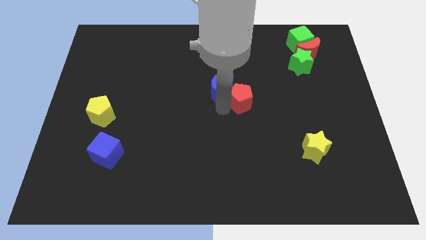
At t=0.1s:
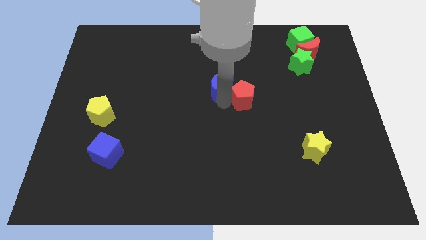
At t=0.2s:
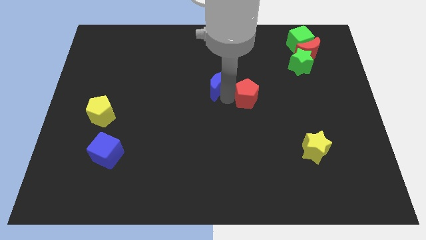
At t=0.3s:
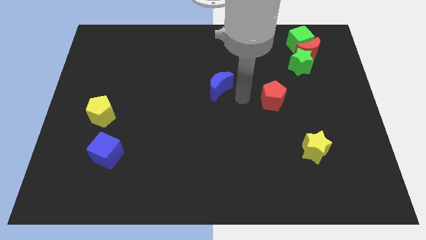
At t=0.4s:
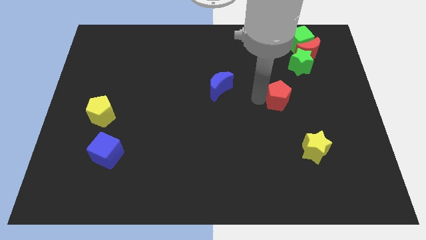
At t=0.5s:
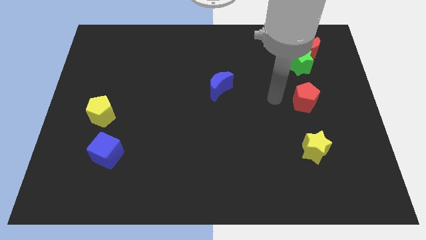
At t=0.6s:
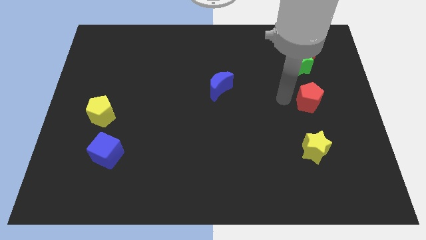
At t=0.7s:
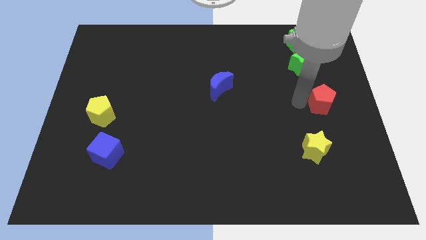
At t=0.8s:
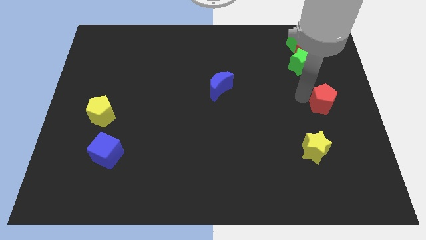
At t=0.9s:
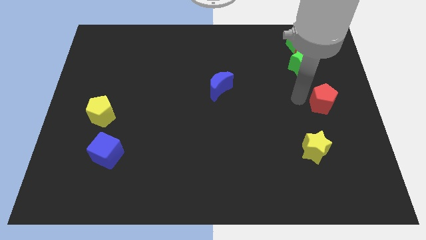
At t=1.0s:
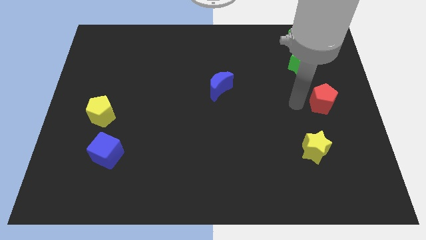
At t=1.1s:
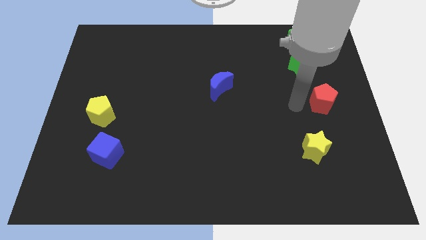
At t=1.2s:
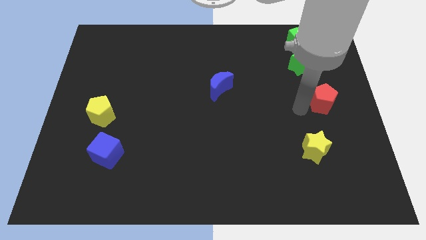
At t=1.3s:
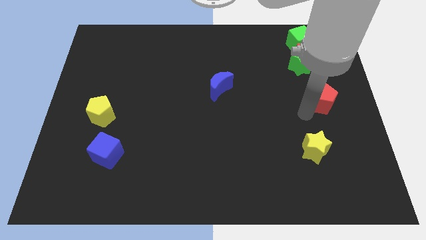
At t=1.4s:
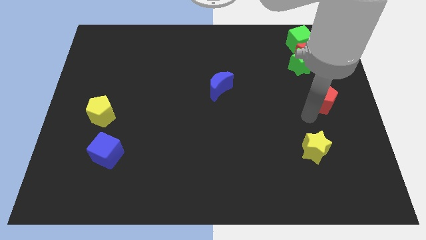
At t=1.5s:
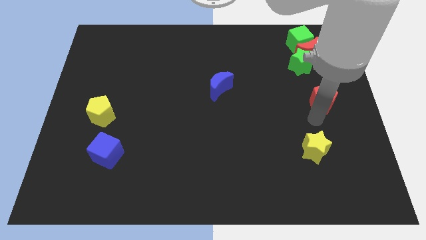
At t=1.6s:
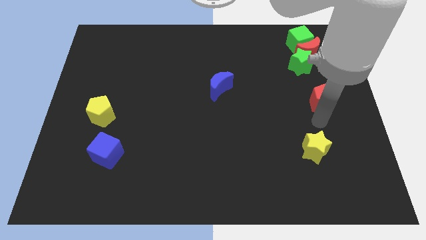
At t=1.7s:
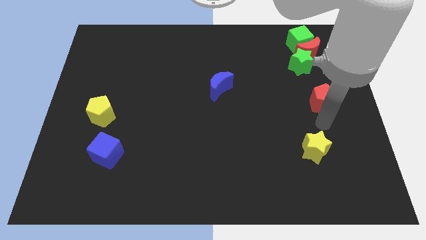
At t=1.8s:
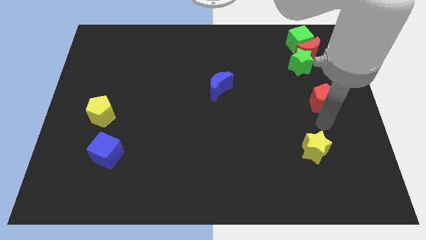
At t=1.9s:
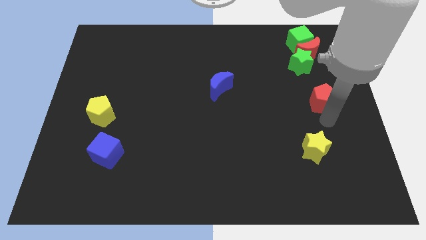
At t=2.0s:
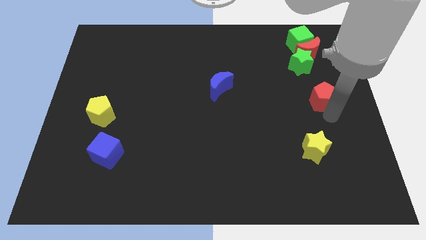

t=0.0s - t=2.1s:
push the red pentagon to the right

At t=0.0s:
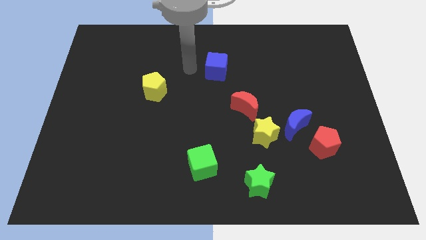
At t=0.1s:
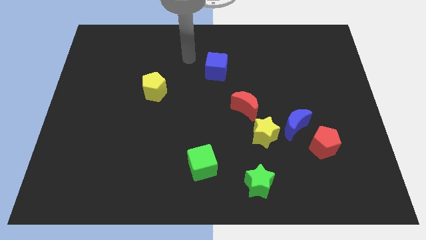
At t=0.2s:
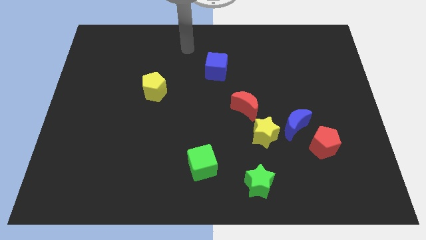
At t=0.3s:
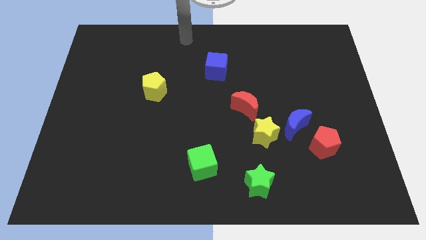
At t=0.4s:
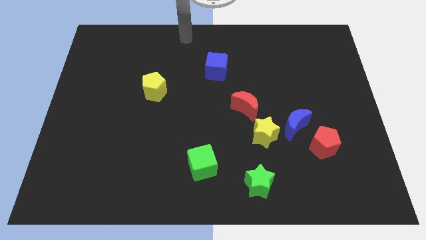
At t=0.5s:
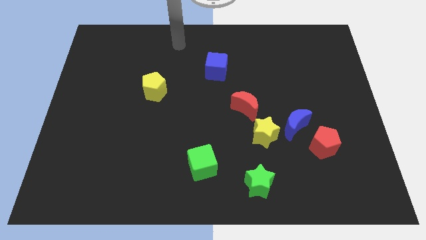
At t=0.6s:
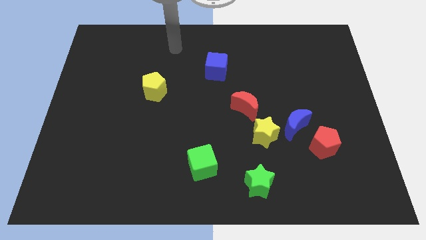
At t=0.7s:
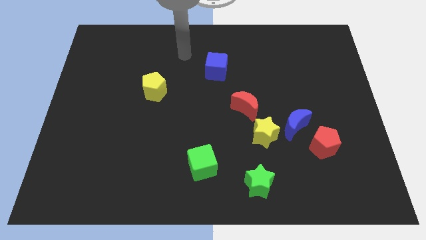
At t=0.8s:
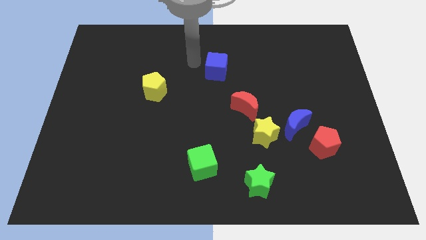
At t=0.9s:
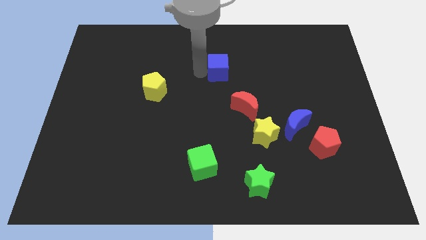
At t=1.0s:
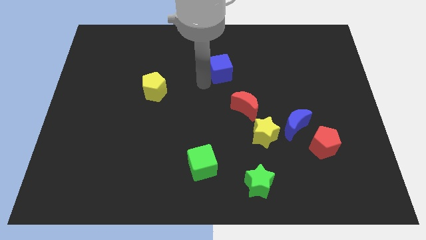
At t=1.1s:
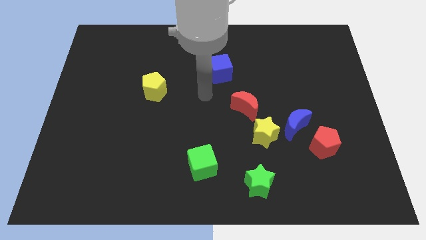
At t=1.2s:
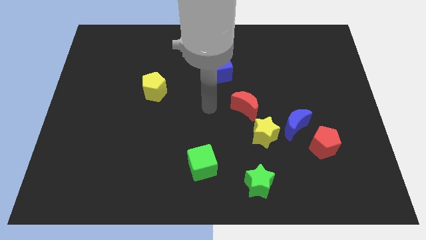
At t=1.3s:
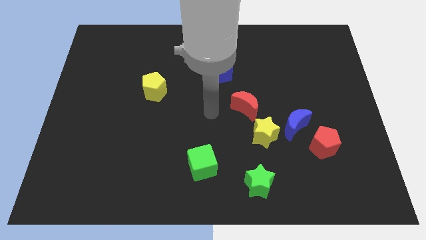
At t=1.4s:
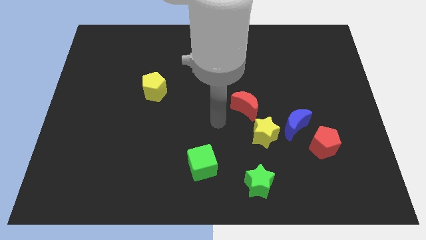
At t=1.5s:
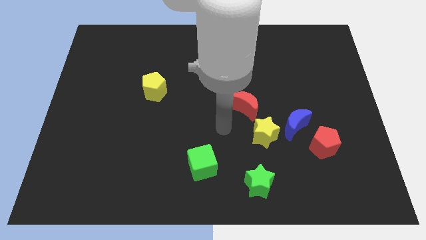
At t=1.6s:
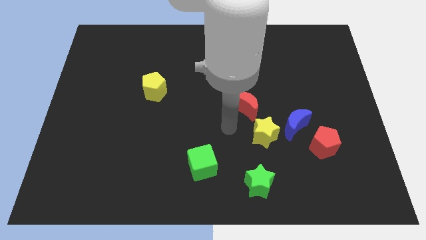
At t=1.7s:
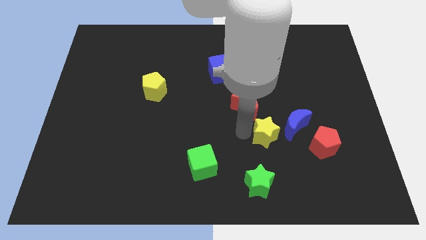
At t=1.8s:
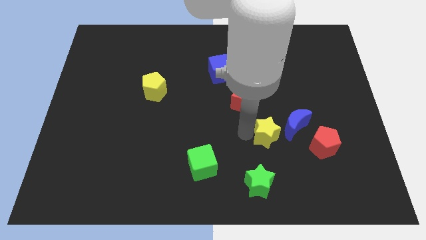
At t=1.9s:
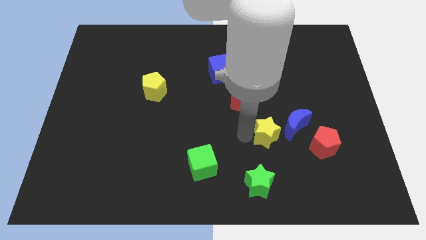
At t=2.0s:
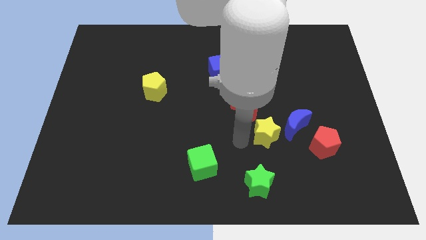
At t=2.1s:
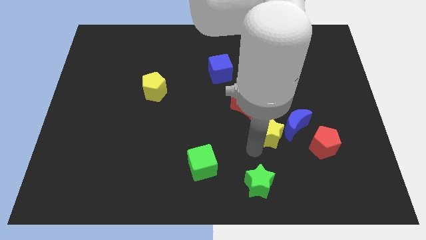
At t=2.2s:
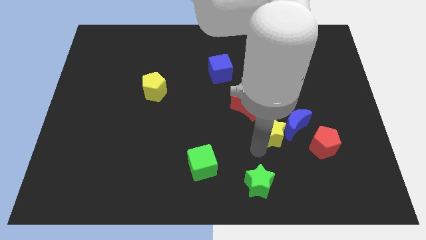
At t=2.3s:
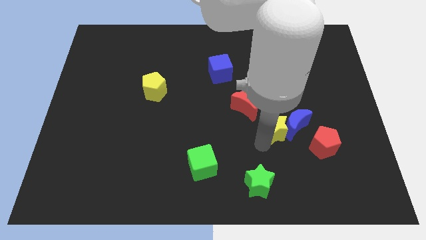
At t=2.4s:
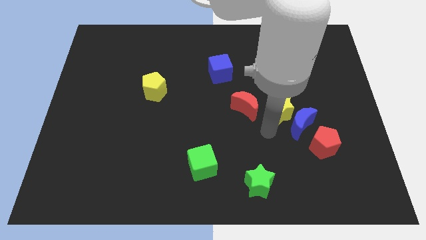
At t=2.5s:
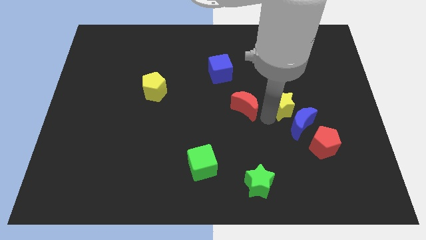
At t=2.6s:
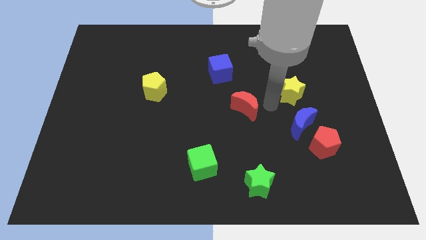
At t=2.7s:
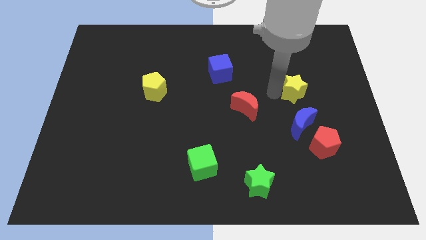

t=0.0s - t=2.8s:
push the yellow star to the right

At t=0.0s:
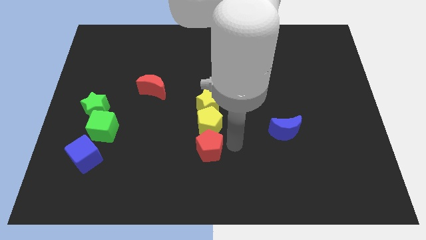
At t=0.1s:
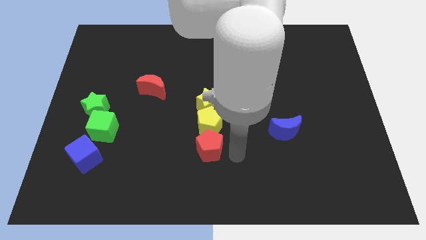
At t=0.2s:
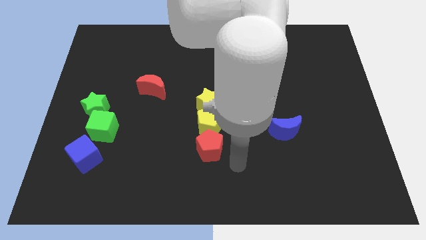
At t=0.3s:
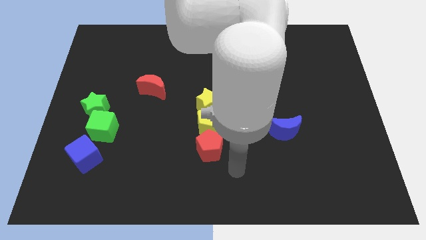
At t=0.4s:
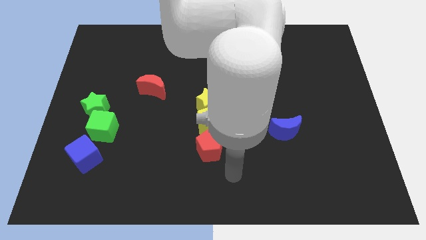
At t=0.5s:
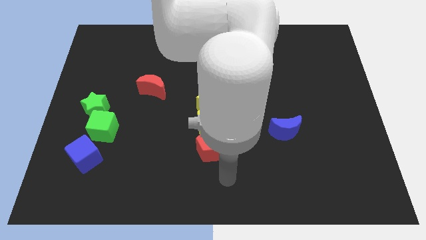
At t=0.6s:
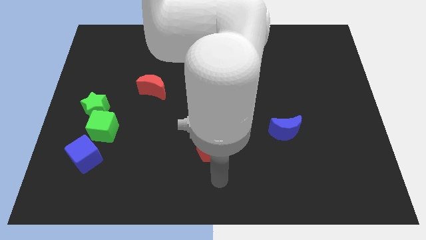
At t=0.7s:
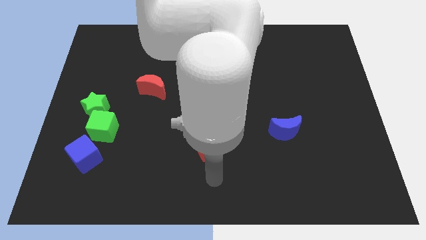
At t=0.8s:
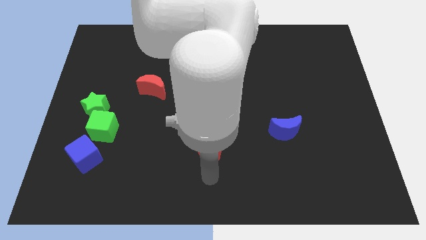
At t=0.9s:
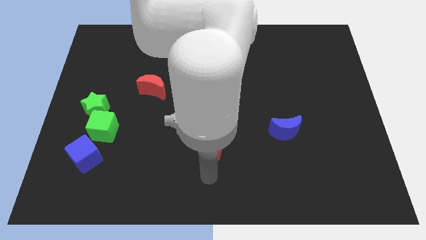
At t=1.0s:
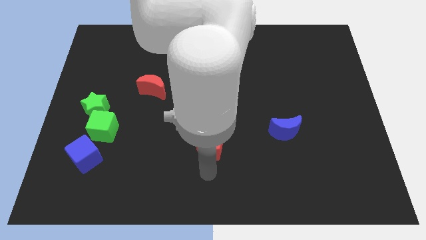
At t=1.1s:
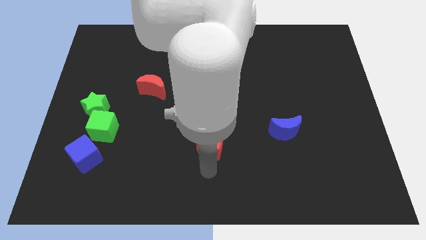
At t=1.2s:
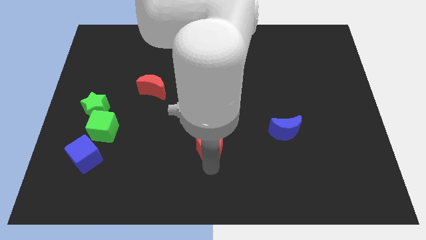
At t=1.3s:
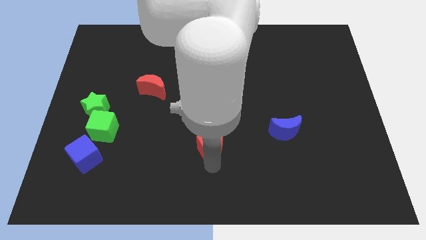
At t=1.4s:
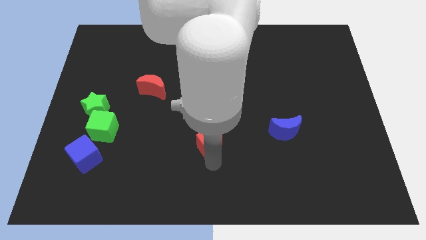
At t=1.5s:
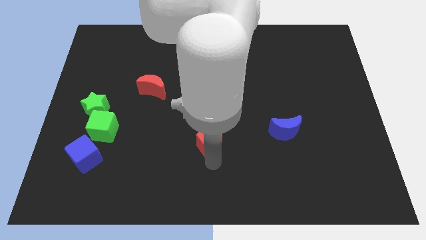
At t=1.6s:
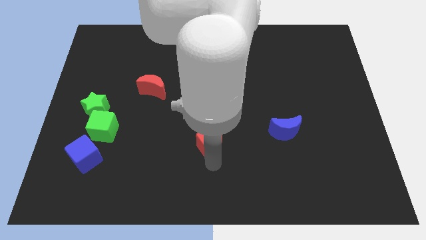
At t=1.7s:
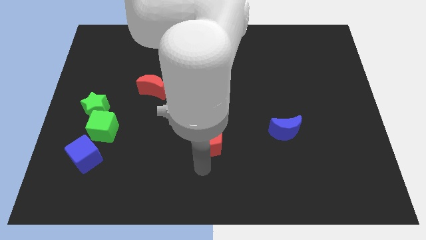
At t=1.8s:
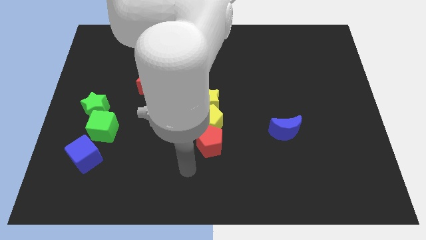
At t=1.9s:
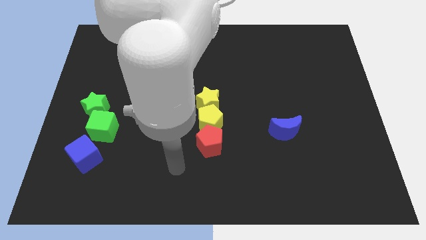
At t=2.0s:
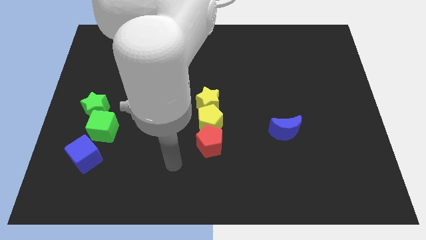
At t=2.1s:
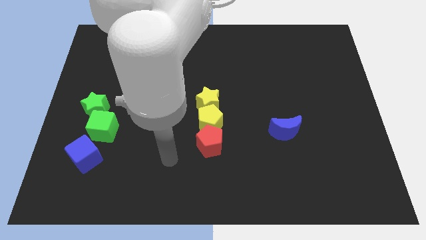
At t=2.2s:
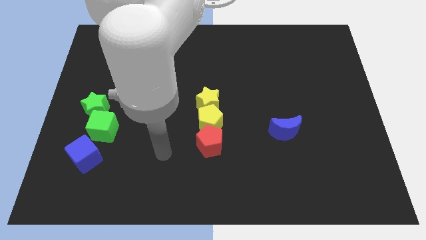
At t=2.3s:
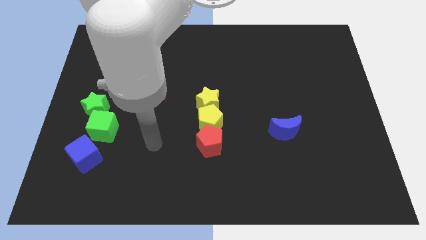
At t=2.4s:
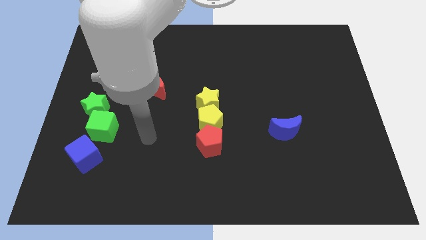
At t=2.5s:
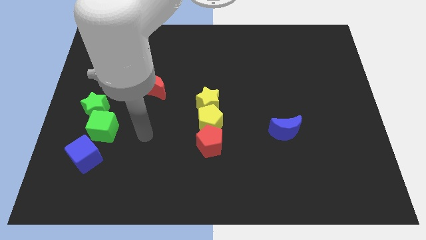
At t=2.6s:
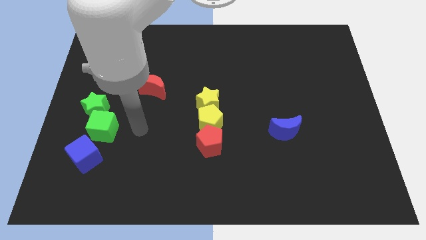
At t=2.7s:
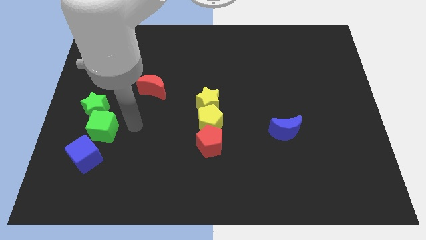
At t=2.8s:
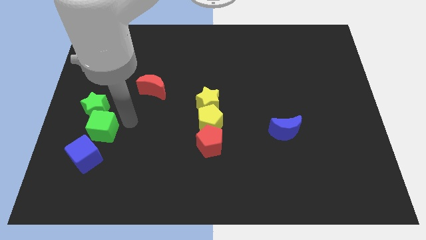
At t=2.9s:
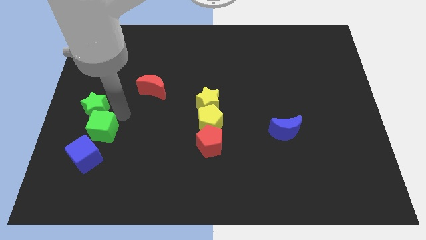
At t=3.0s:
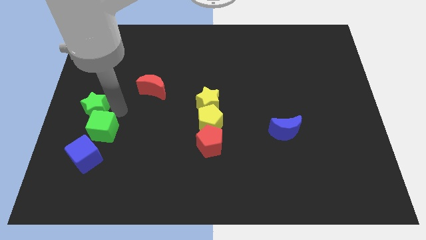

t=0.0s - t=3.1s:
move the vertical line of blocks slightly upwards and go away

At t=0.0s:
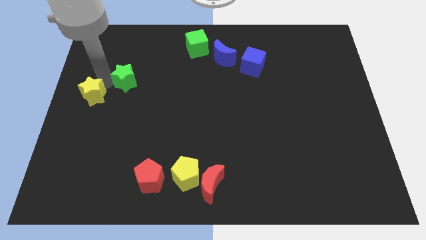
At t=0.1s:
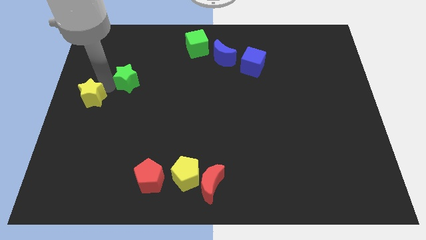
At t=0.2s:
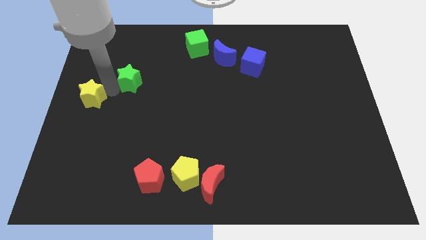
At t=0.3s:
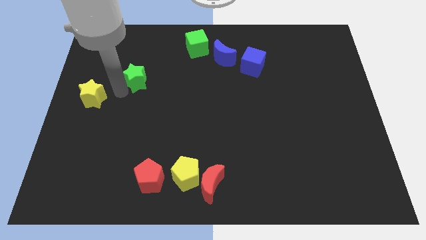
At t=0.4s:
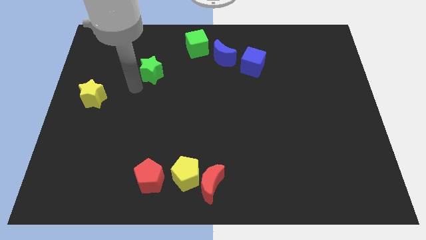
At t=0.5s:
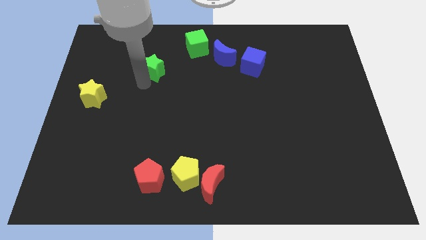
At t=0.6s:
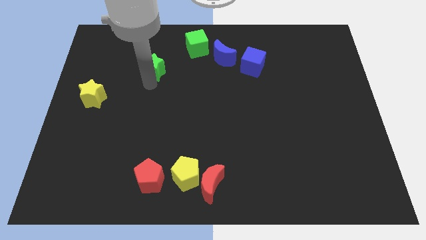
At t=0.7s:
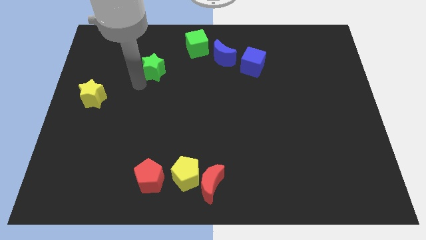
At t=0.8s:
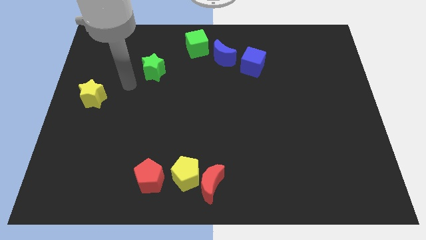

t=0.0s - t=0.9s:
separate the green star from the yellow star

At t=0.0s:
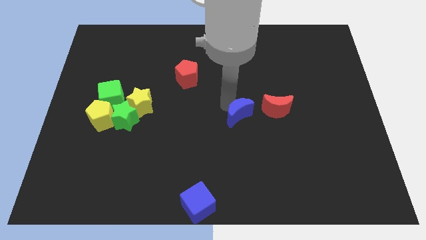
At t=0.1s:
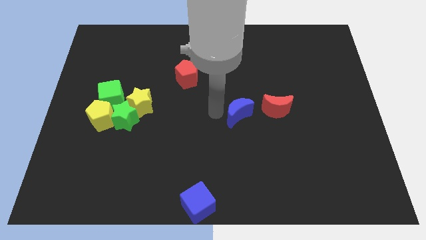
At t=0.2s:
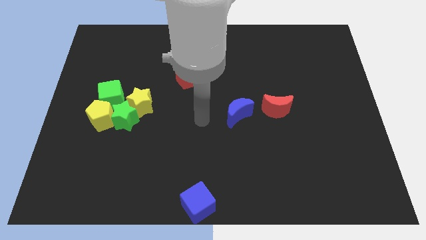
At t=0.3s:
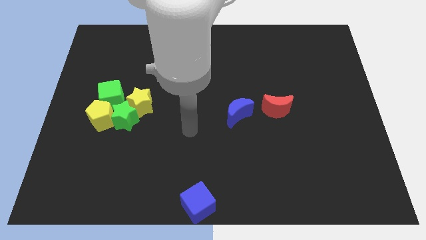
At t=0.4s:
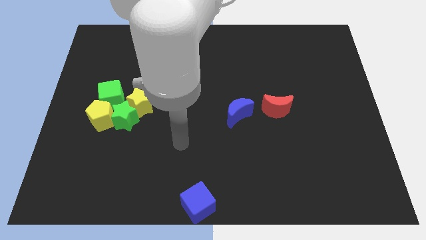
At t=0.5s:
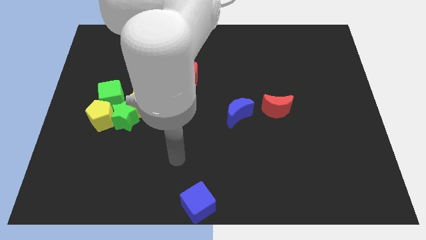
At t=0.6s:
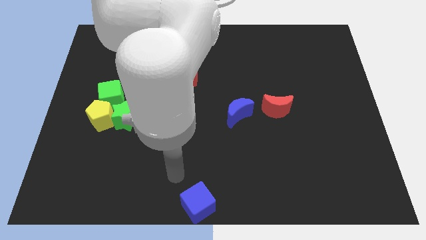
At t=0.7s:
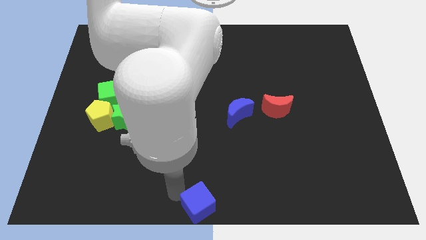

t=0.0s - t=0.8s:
move your arm towards the blue cube
